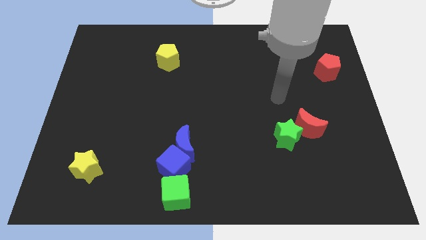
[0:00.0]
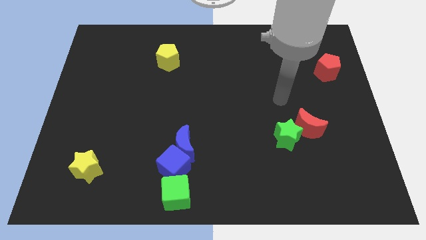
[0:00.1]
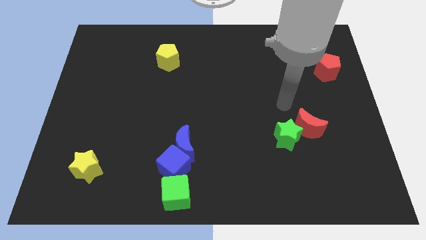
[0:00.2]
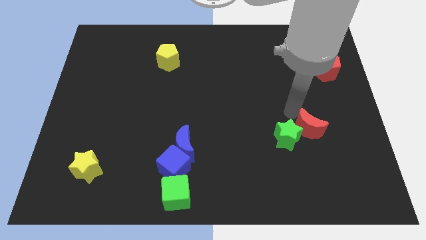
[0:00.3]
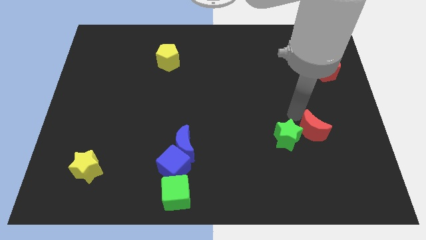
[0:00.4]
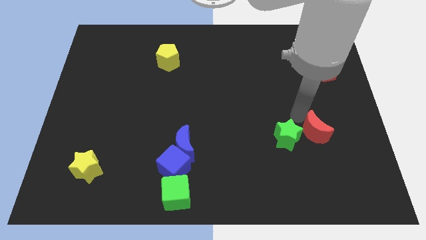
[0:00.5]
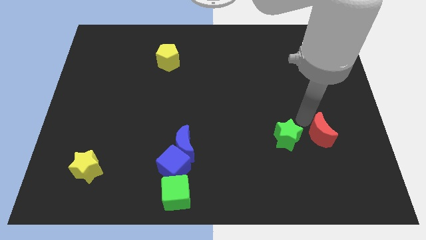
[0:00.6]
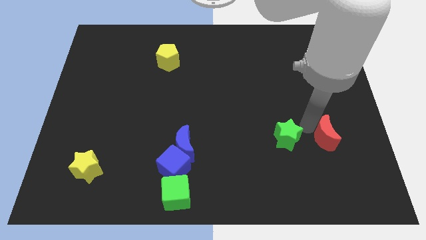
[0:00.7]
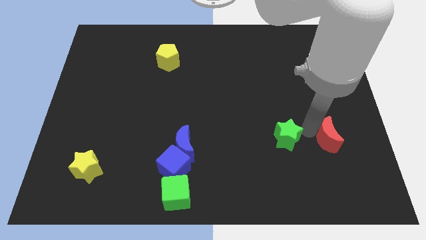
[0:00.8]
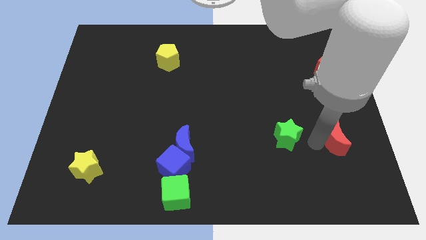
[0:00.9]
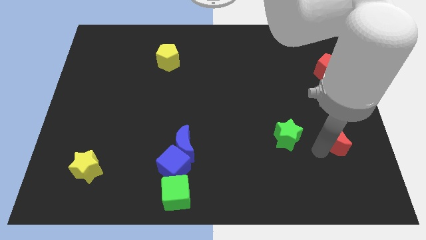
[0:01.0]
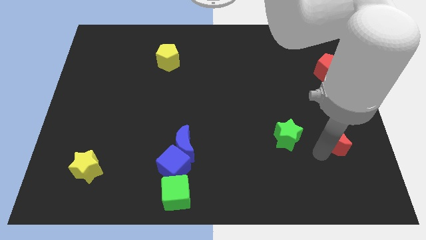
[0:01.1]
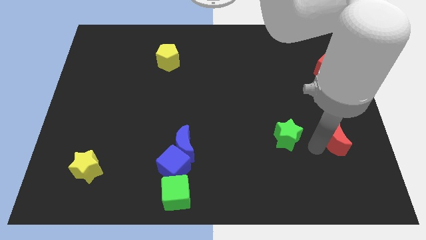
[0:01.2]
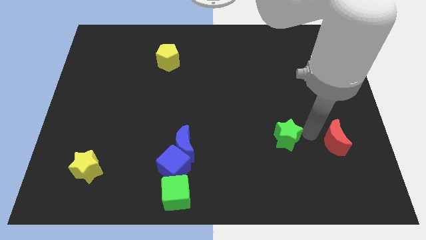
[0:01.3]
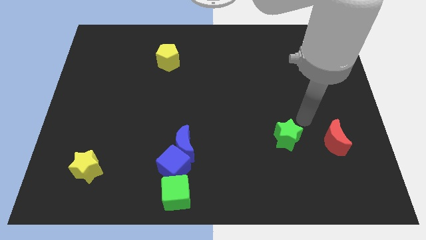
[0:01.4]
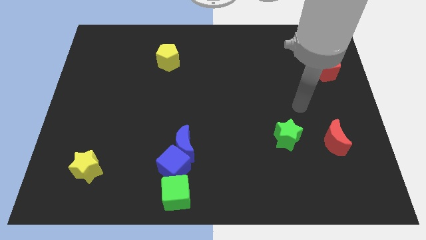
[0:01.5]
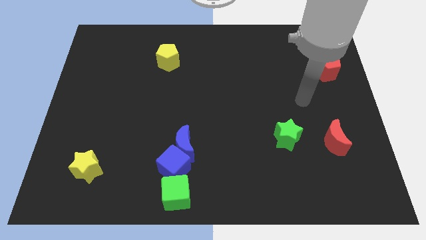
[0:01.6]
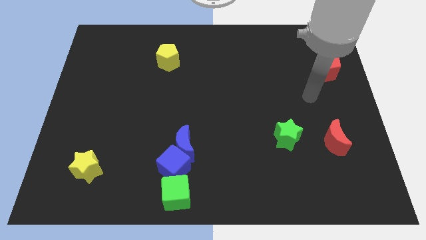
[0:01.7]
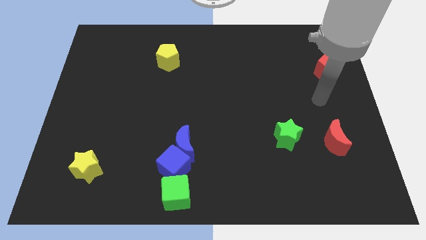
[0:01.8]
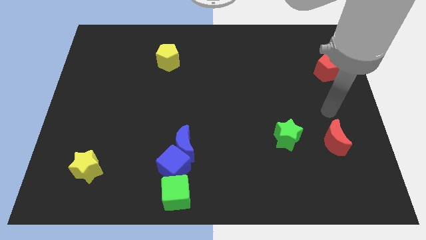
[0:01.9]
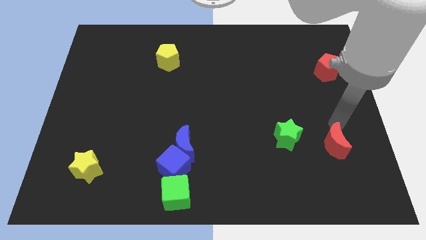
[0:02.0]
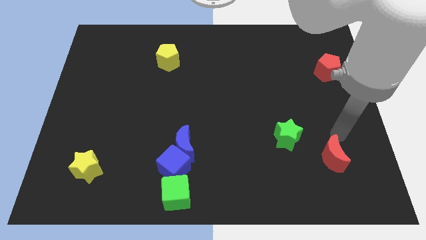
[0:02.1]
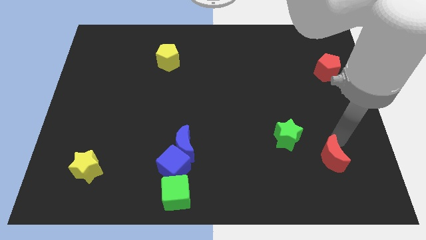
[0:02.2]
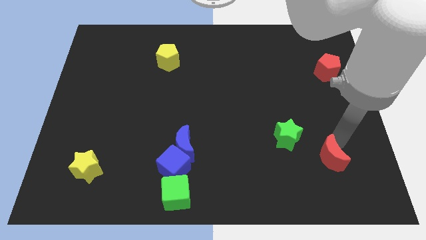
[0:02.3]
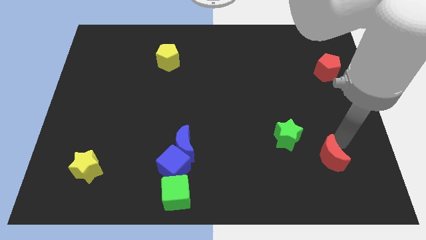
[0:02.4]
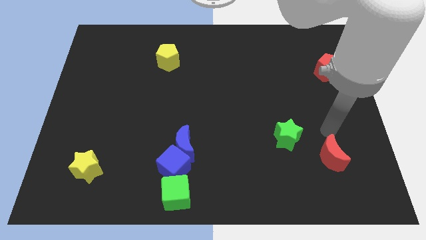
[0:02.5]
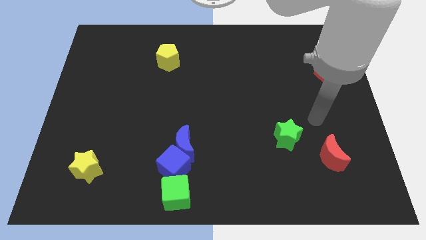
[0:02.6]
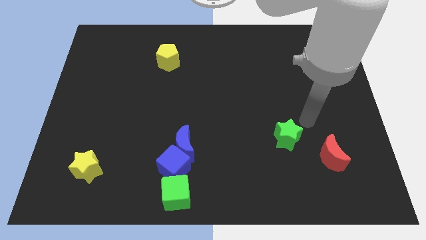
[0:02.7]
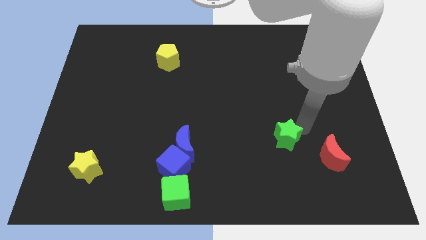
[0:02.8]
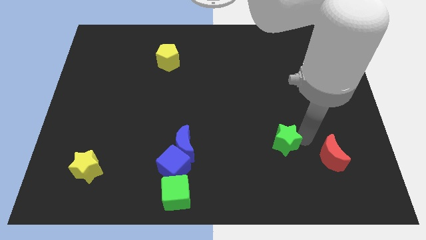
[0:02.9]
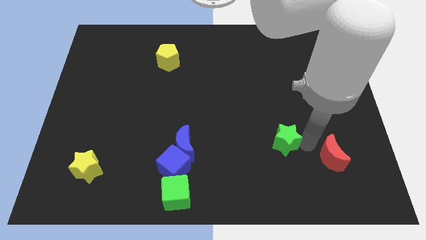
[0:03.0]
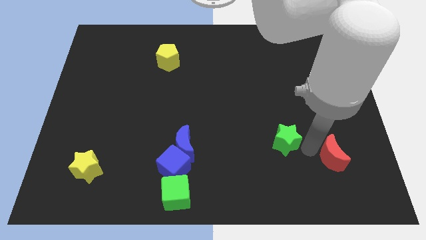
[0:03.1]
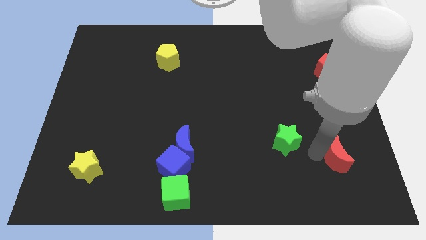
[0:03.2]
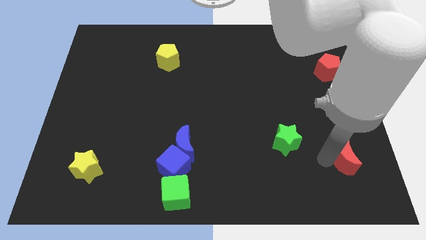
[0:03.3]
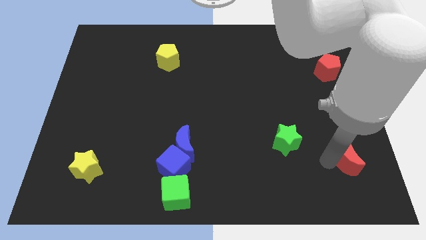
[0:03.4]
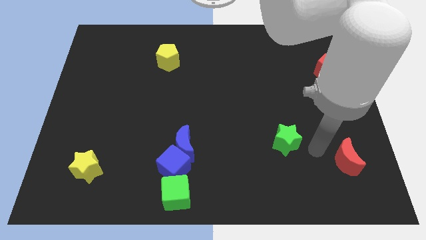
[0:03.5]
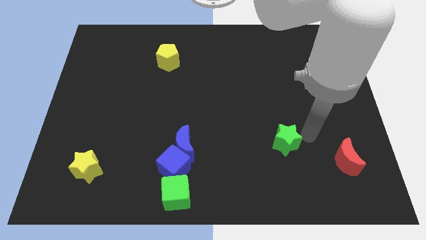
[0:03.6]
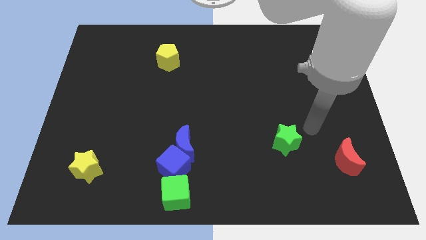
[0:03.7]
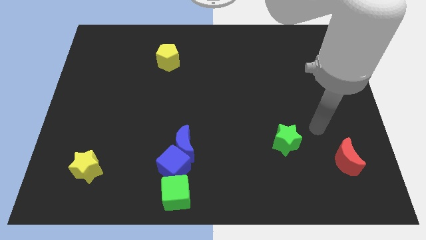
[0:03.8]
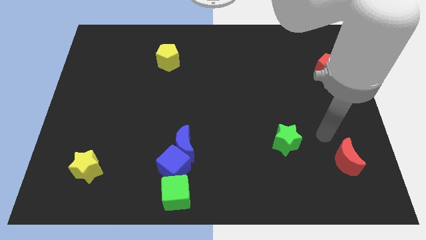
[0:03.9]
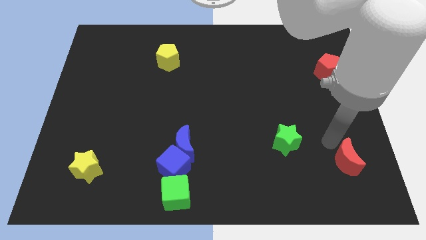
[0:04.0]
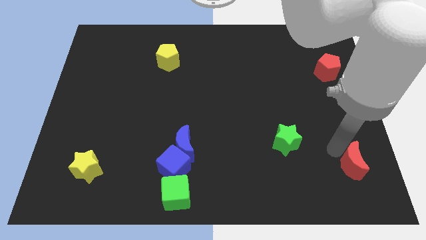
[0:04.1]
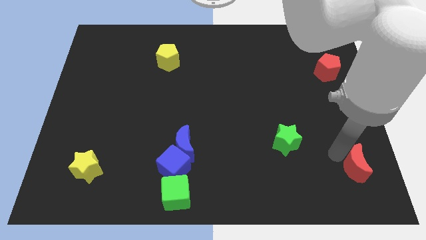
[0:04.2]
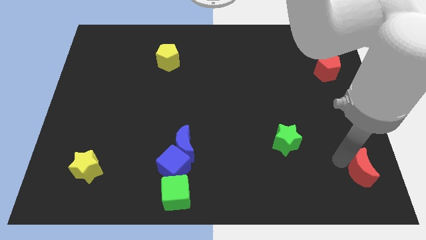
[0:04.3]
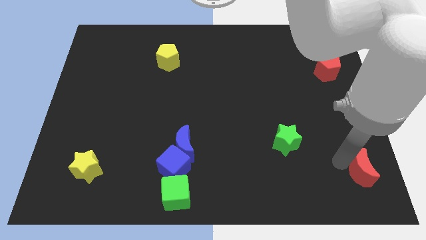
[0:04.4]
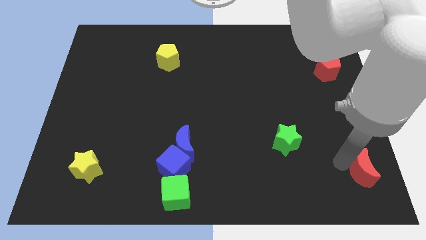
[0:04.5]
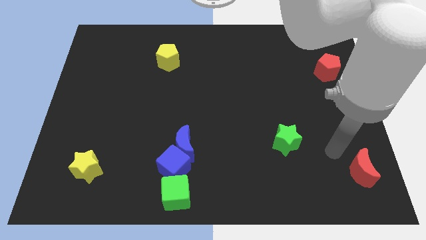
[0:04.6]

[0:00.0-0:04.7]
push the red crescent to the bottom right

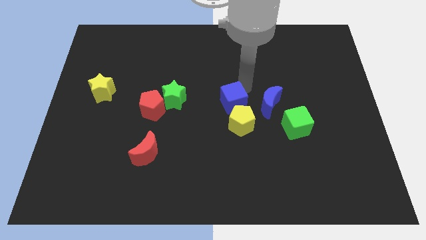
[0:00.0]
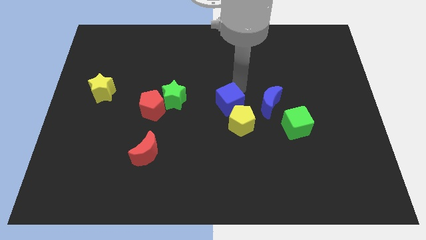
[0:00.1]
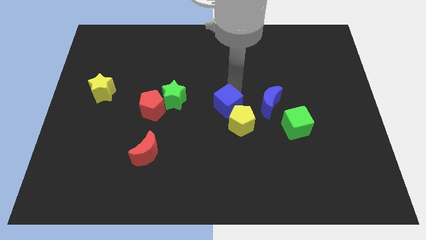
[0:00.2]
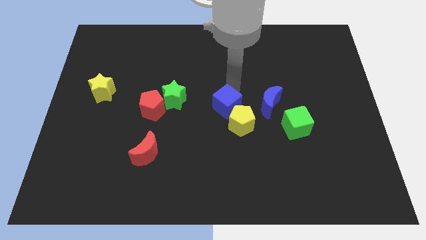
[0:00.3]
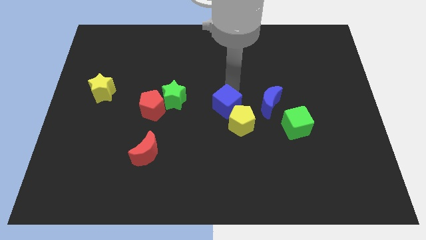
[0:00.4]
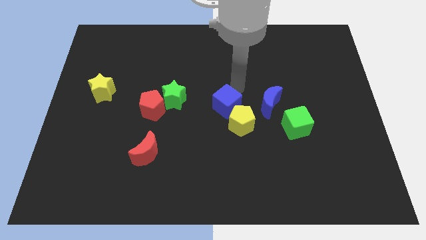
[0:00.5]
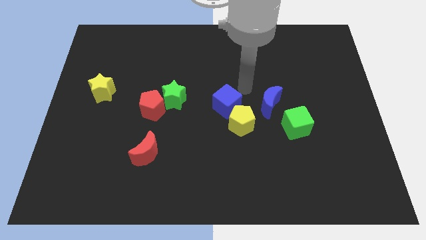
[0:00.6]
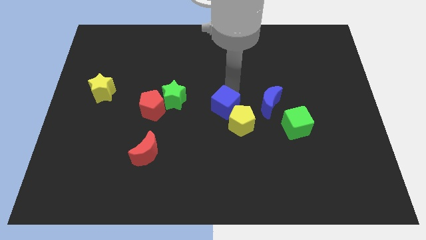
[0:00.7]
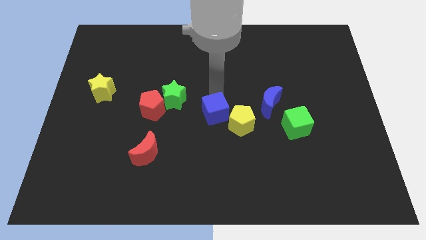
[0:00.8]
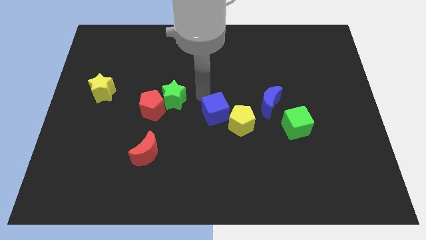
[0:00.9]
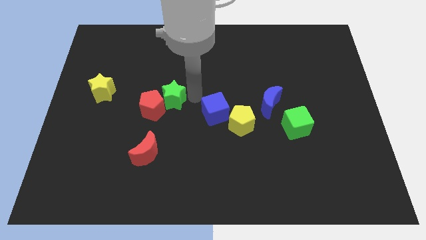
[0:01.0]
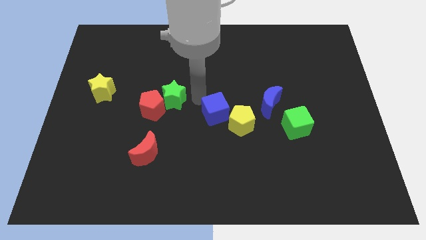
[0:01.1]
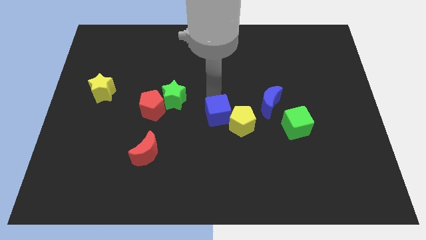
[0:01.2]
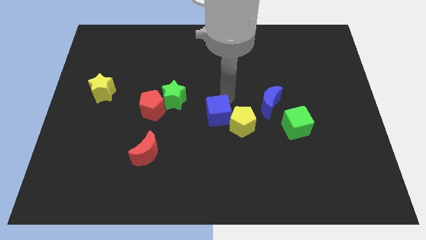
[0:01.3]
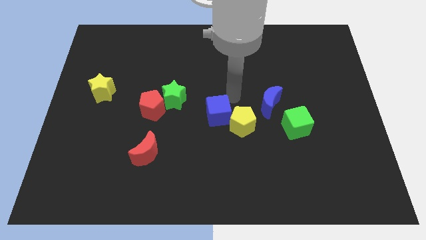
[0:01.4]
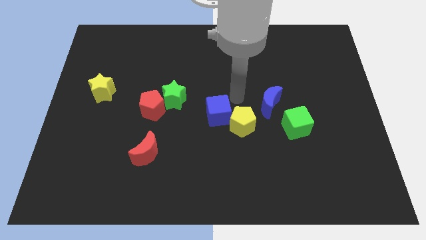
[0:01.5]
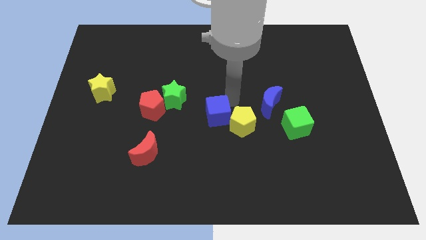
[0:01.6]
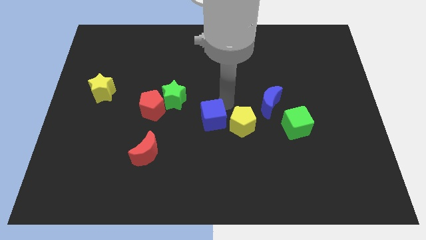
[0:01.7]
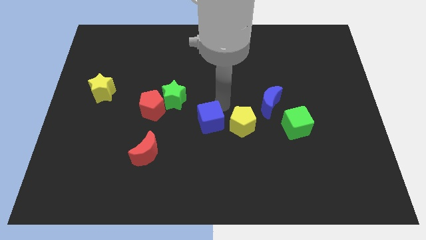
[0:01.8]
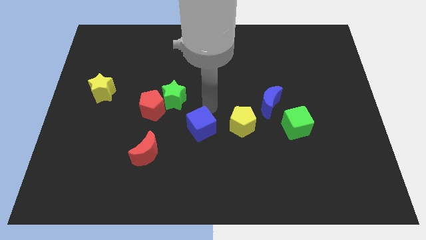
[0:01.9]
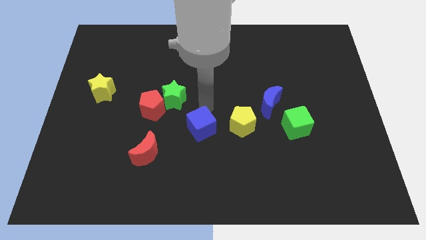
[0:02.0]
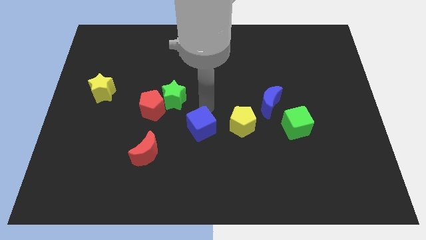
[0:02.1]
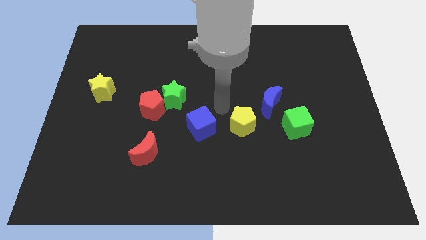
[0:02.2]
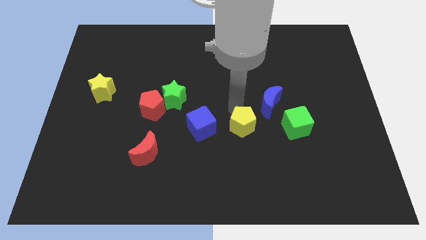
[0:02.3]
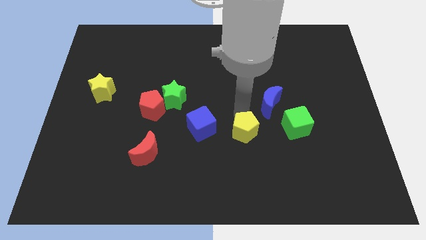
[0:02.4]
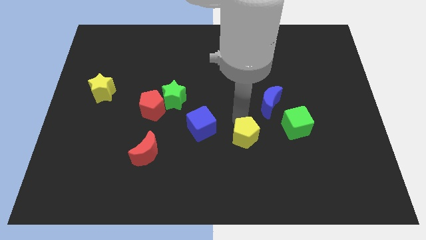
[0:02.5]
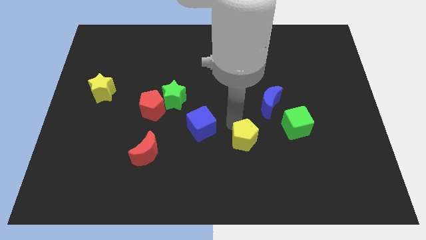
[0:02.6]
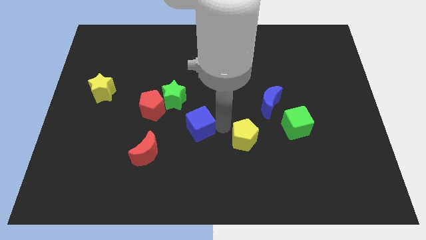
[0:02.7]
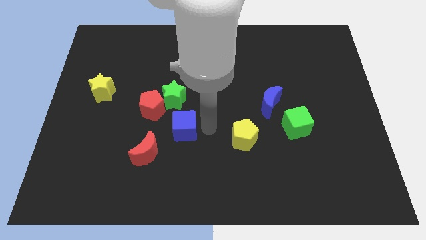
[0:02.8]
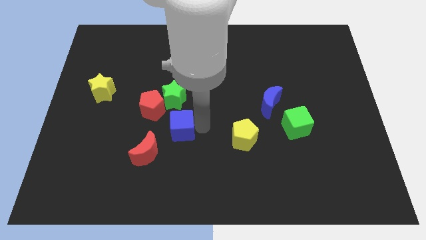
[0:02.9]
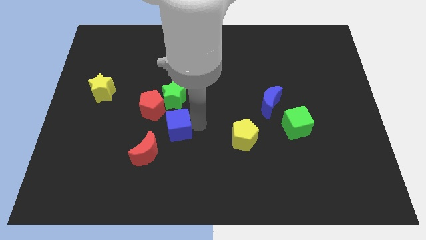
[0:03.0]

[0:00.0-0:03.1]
place blue cube below green star

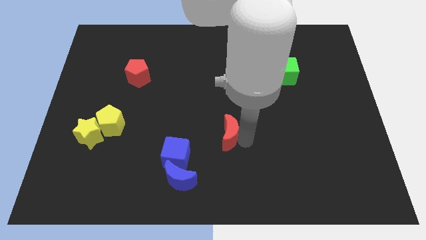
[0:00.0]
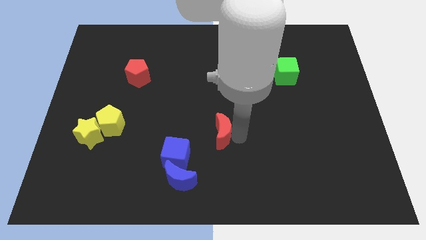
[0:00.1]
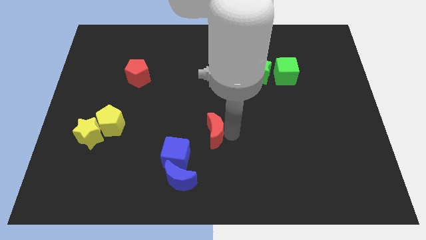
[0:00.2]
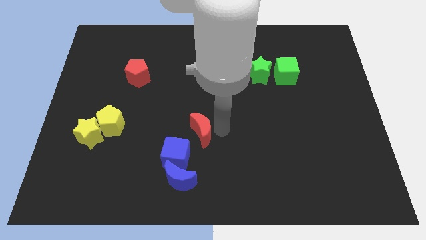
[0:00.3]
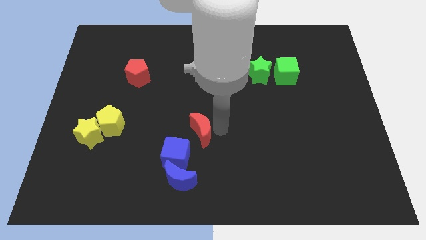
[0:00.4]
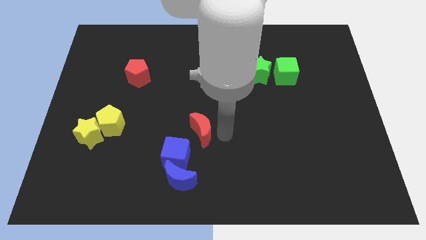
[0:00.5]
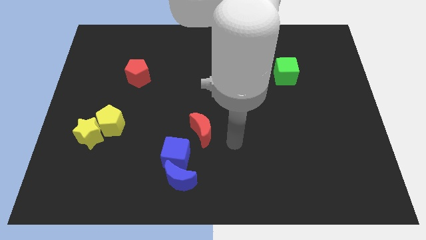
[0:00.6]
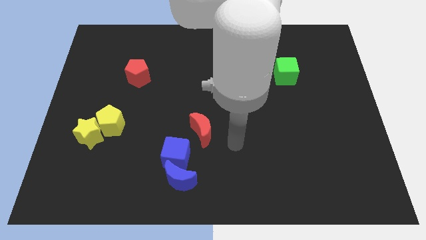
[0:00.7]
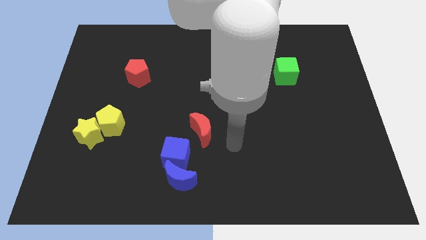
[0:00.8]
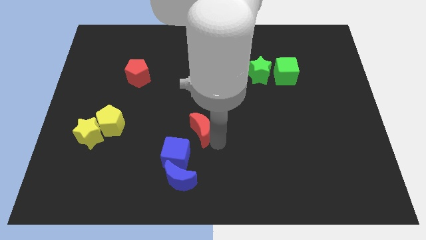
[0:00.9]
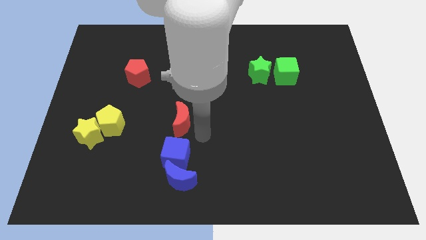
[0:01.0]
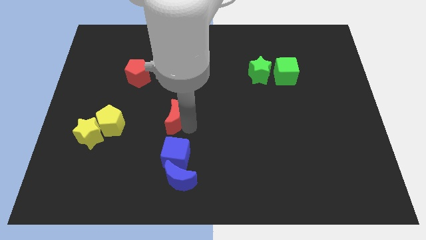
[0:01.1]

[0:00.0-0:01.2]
drag red moon to the top of blue cube
